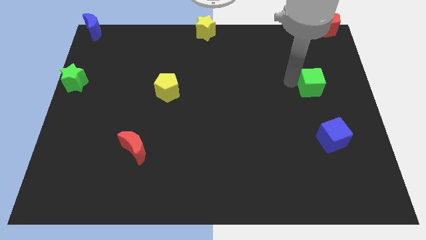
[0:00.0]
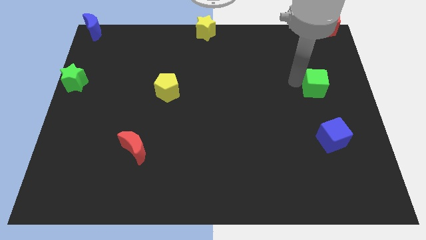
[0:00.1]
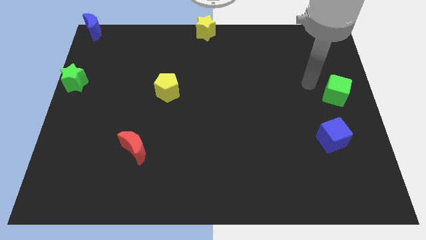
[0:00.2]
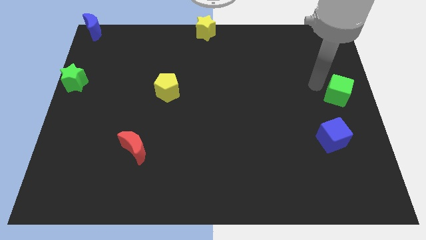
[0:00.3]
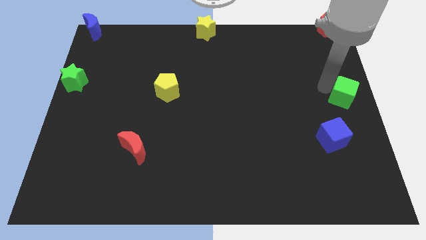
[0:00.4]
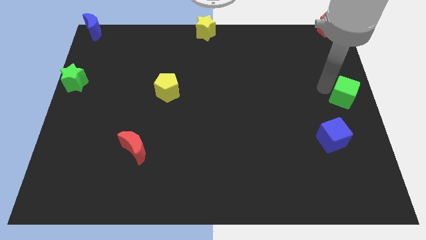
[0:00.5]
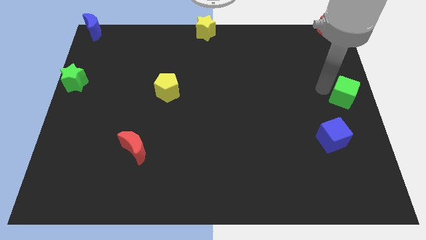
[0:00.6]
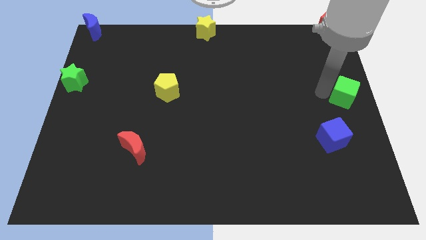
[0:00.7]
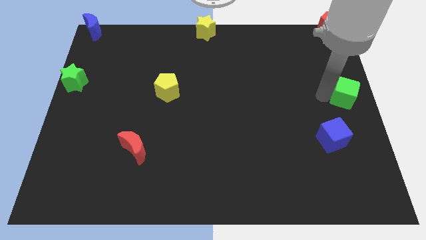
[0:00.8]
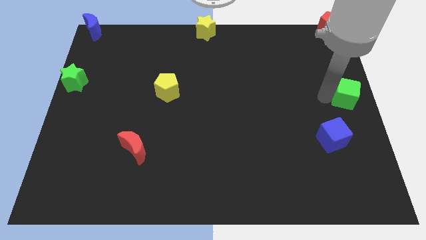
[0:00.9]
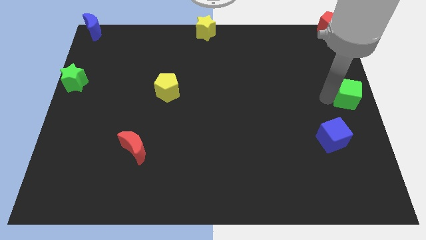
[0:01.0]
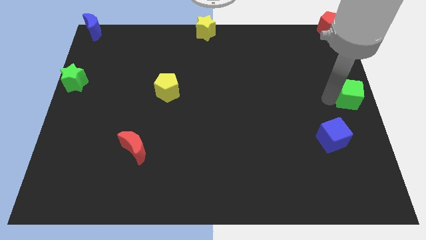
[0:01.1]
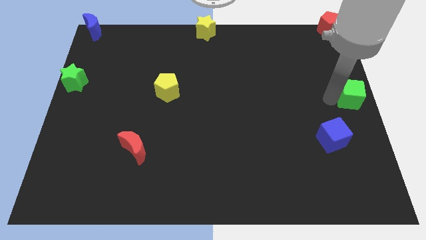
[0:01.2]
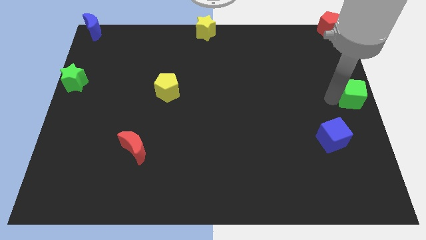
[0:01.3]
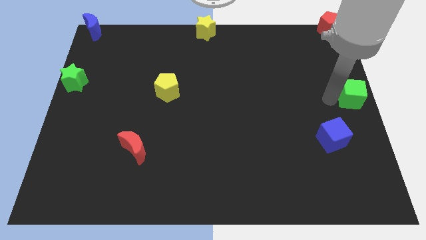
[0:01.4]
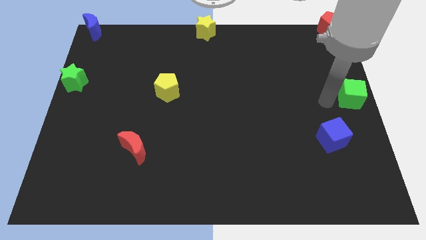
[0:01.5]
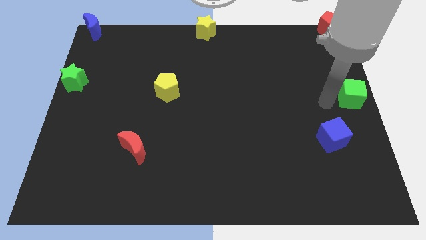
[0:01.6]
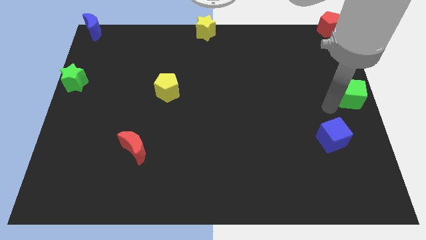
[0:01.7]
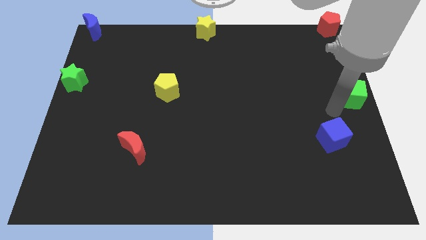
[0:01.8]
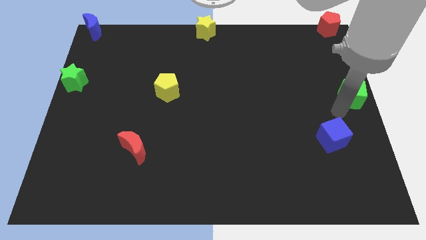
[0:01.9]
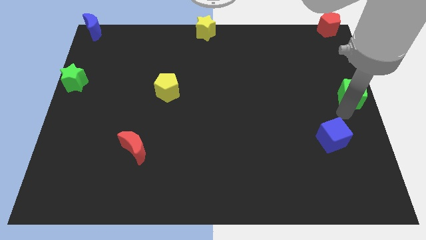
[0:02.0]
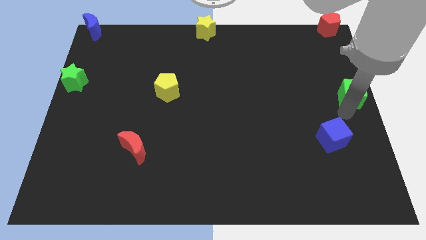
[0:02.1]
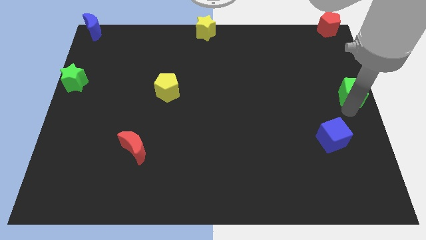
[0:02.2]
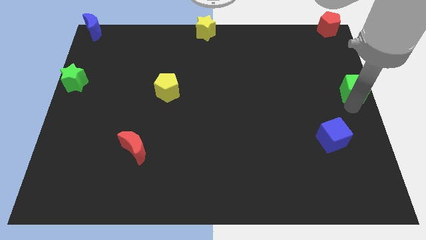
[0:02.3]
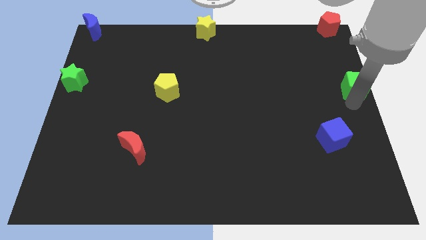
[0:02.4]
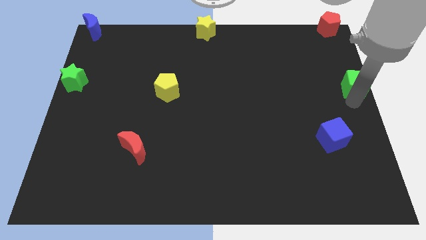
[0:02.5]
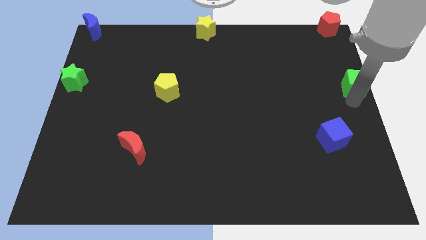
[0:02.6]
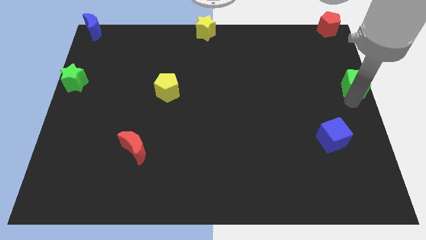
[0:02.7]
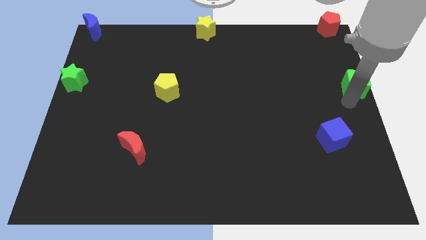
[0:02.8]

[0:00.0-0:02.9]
push the green cube to the right center of the board

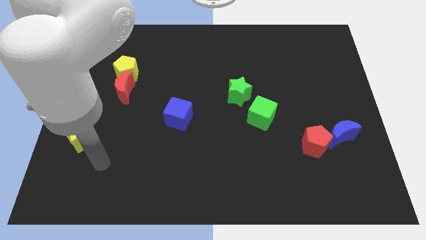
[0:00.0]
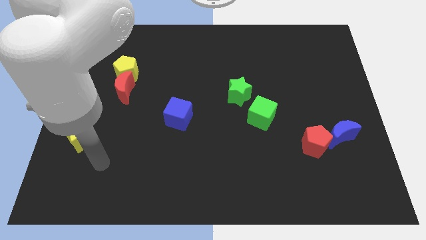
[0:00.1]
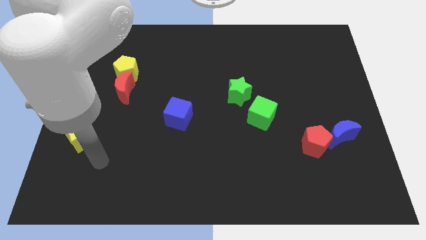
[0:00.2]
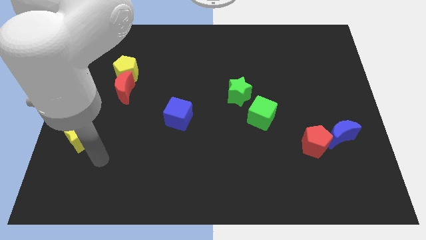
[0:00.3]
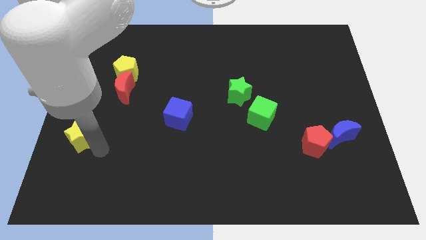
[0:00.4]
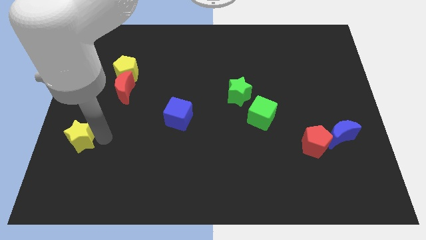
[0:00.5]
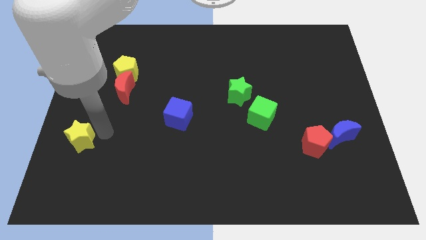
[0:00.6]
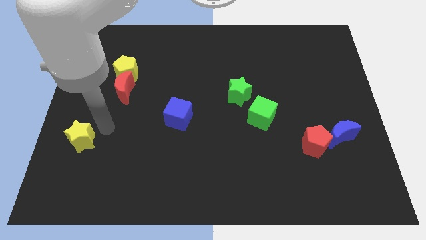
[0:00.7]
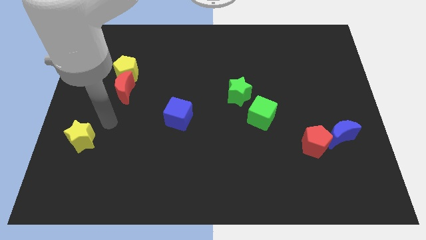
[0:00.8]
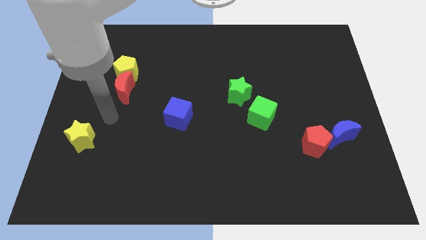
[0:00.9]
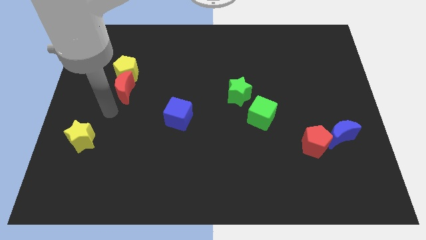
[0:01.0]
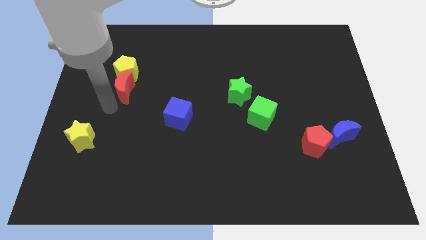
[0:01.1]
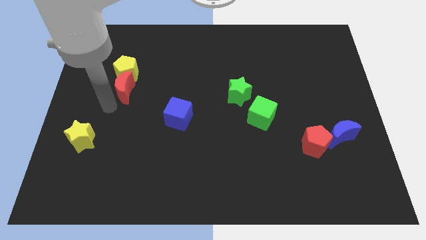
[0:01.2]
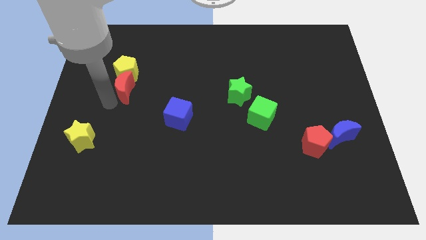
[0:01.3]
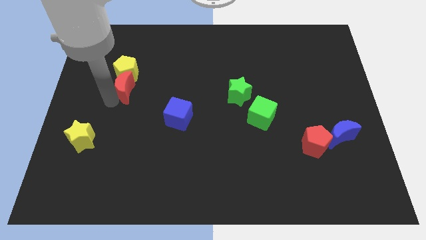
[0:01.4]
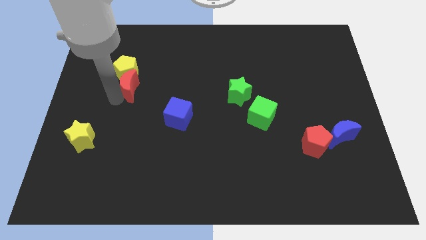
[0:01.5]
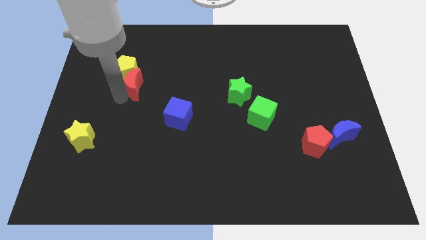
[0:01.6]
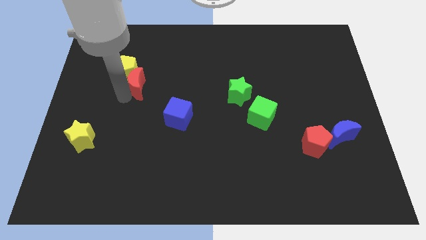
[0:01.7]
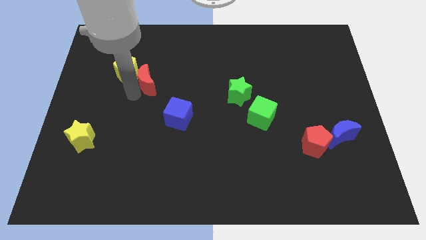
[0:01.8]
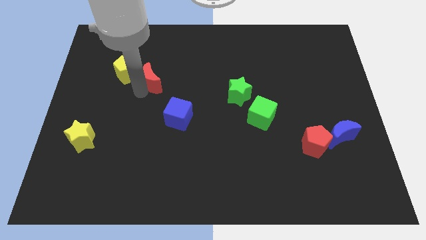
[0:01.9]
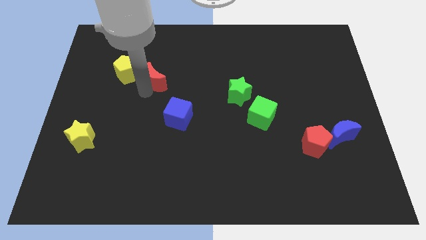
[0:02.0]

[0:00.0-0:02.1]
move the red crescent right to the yellow pentagon

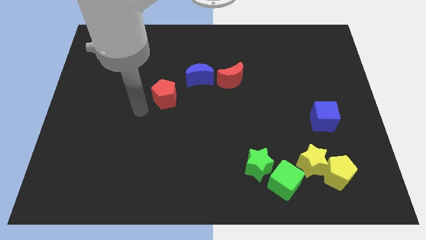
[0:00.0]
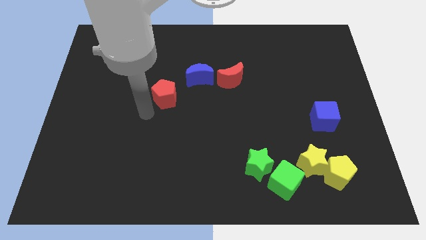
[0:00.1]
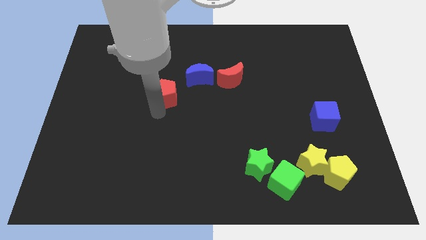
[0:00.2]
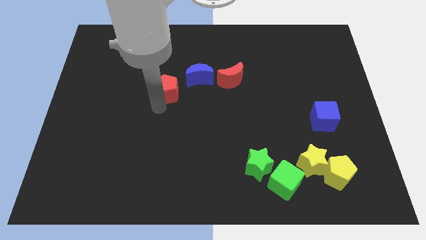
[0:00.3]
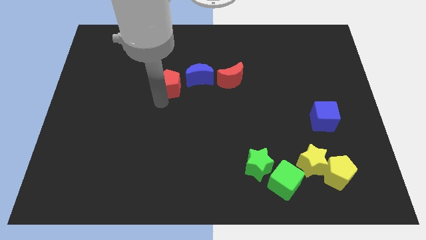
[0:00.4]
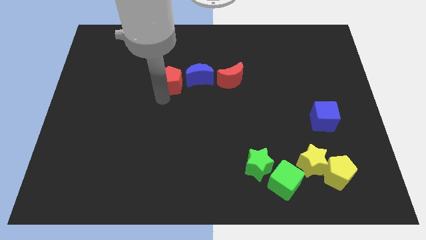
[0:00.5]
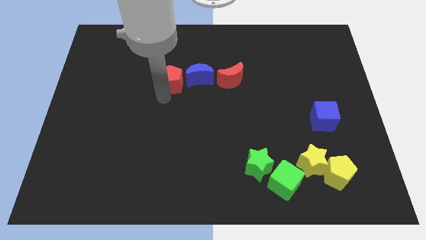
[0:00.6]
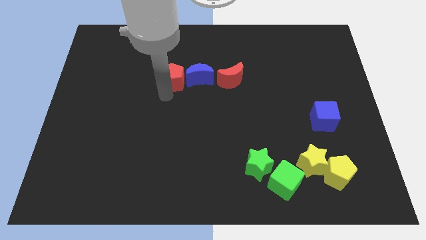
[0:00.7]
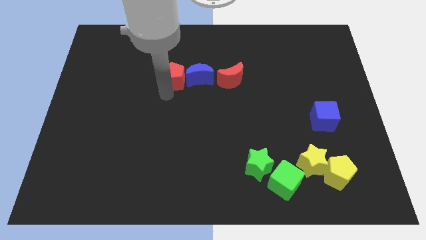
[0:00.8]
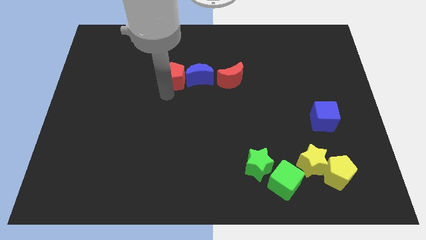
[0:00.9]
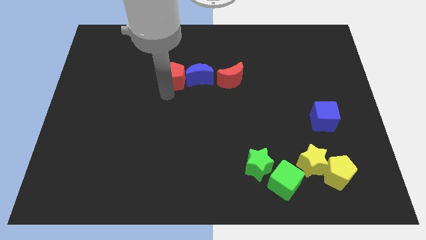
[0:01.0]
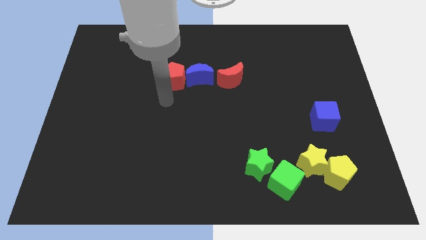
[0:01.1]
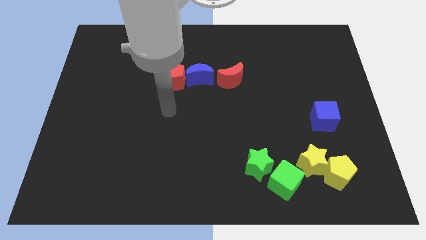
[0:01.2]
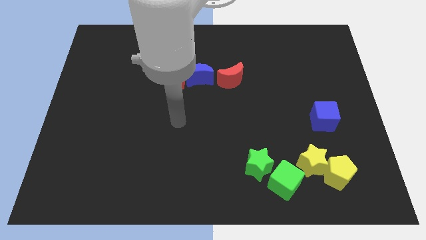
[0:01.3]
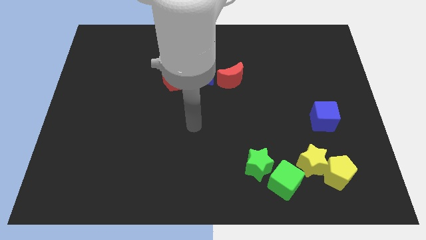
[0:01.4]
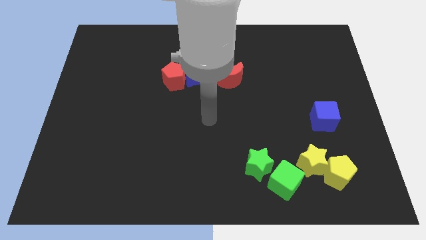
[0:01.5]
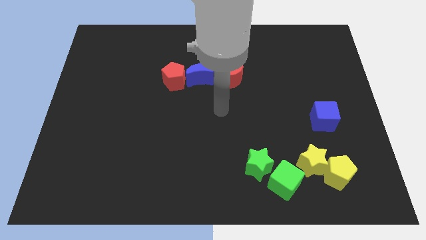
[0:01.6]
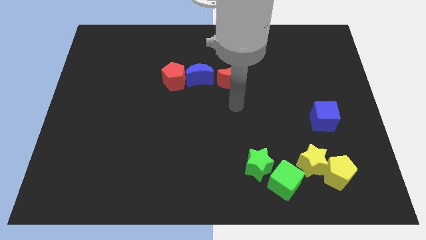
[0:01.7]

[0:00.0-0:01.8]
push the red pentagon towards the left side of the blue crescent

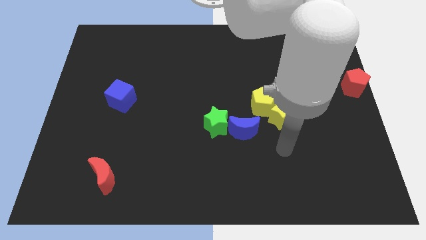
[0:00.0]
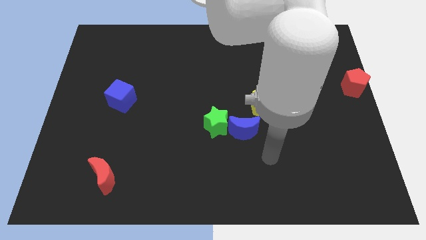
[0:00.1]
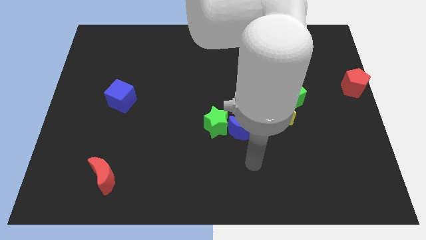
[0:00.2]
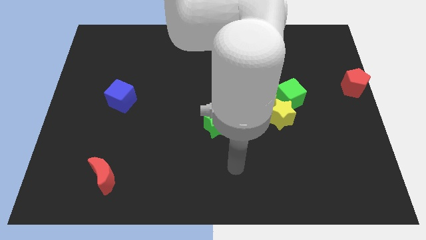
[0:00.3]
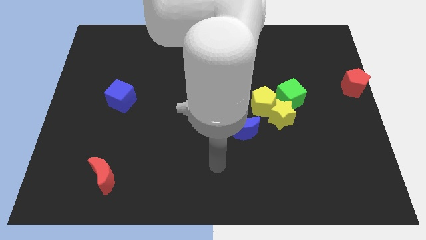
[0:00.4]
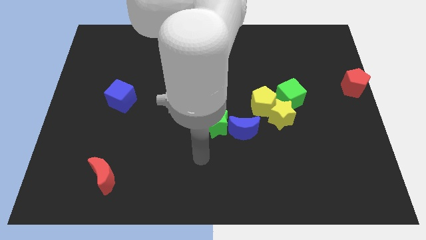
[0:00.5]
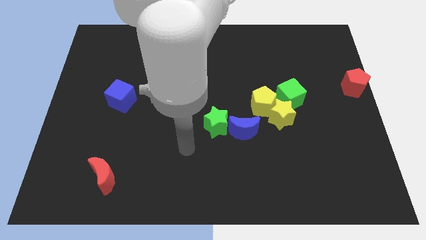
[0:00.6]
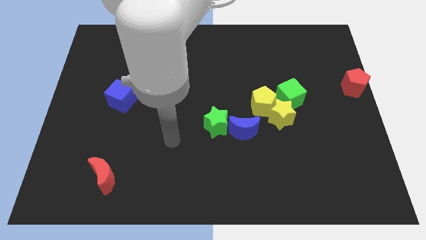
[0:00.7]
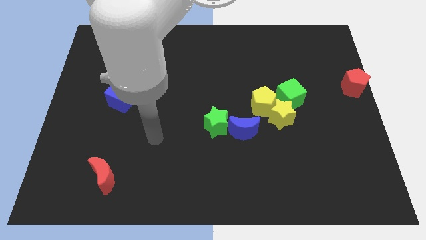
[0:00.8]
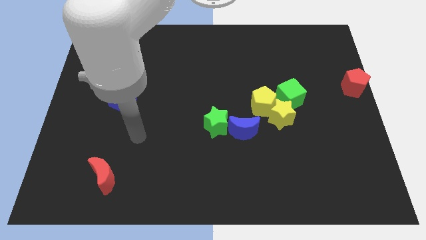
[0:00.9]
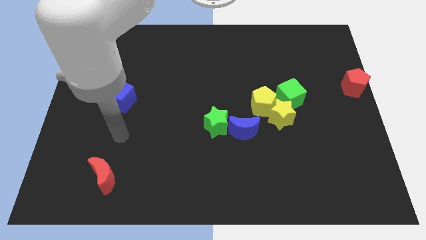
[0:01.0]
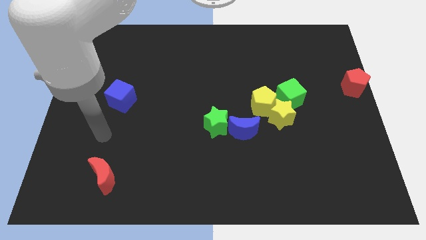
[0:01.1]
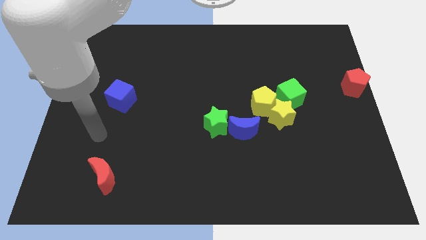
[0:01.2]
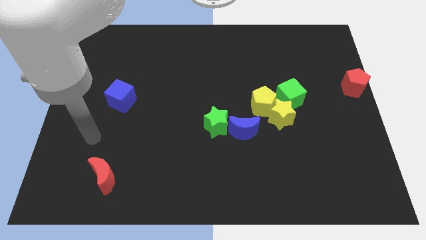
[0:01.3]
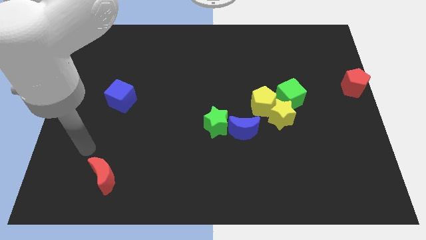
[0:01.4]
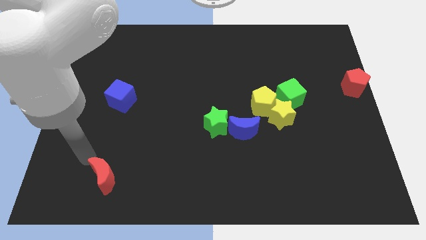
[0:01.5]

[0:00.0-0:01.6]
move your hand towards the red crescent

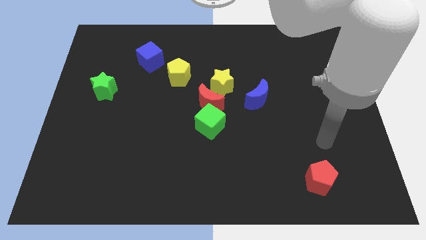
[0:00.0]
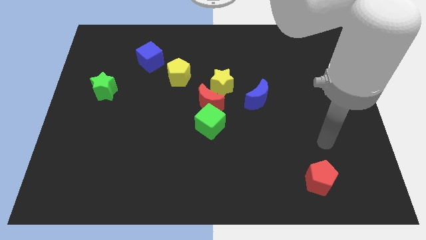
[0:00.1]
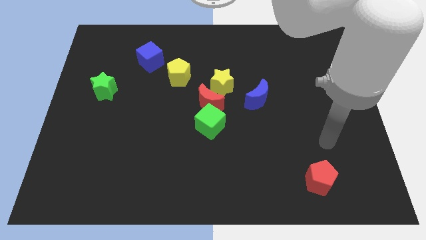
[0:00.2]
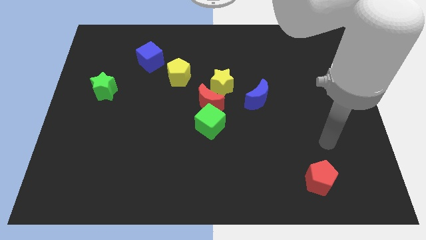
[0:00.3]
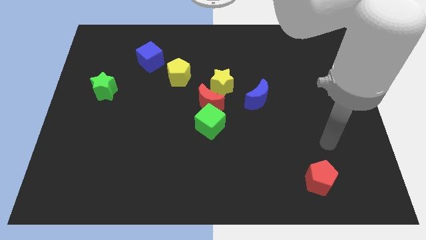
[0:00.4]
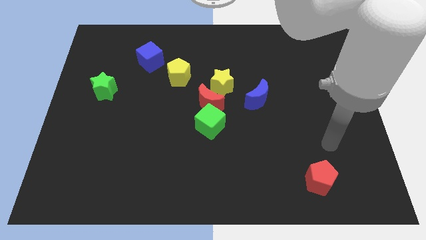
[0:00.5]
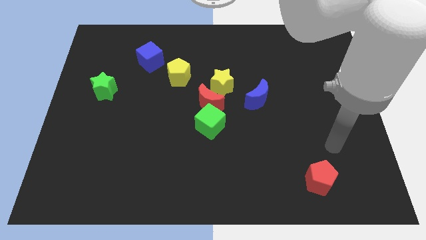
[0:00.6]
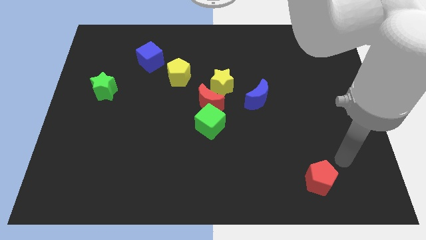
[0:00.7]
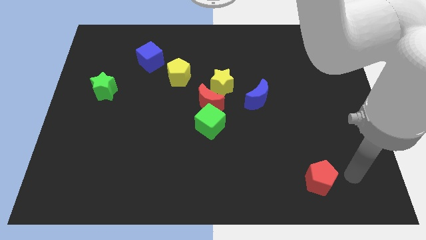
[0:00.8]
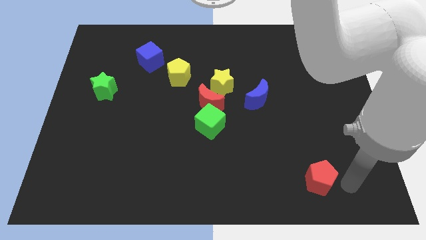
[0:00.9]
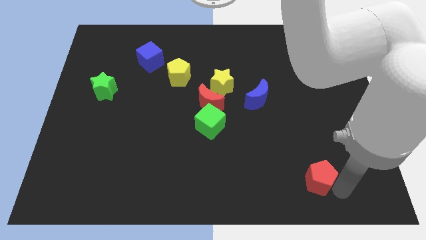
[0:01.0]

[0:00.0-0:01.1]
place the arm right to the red pentagon
